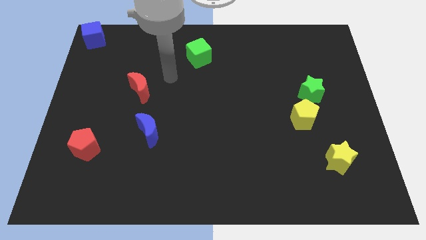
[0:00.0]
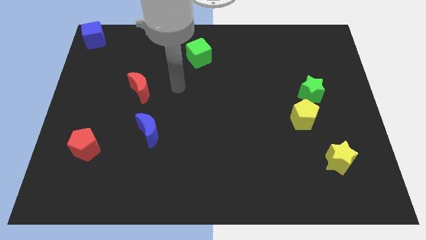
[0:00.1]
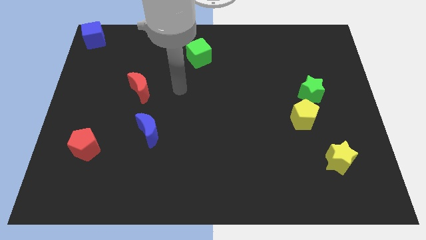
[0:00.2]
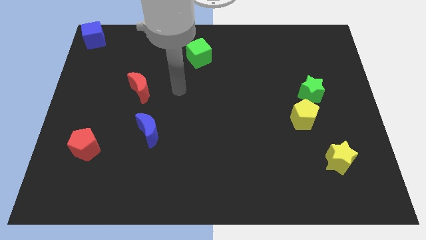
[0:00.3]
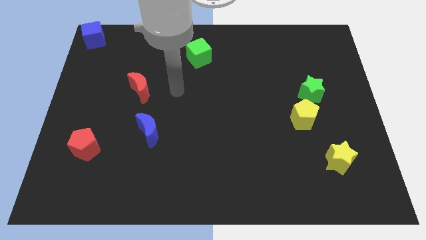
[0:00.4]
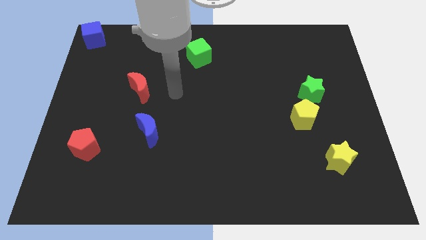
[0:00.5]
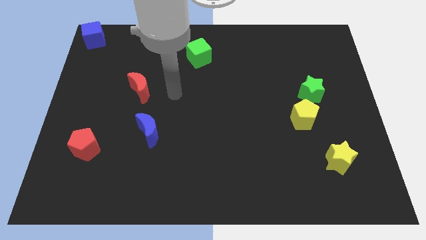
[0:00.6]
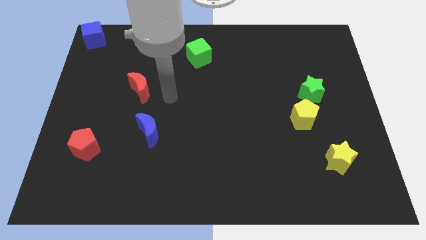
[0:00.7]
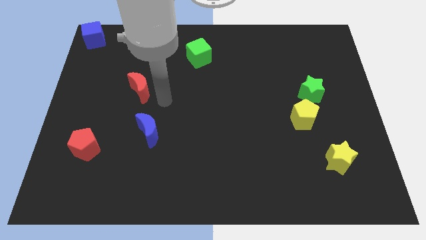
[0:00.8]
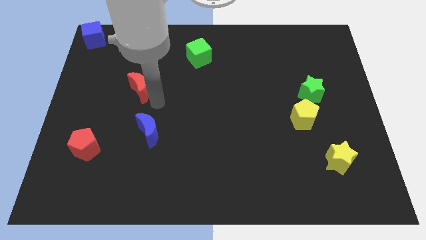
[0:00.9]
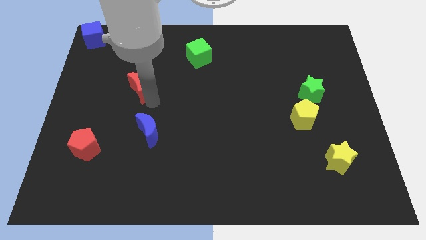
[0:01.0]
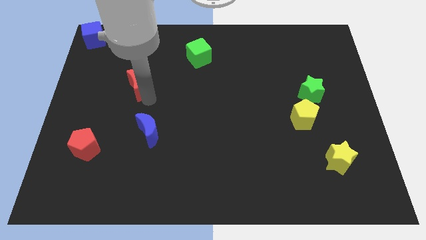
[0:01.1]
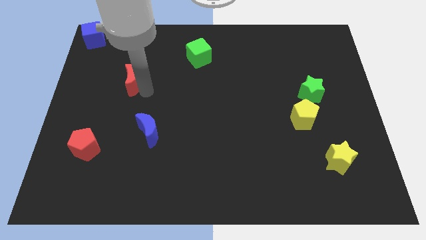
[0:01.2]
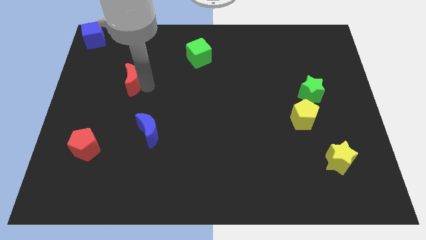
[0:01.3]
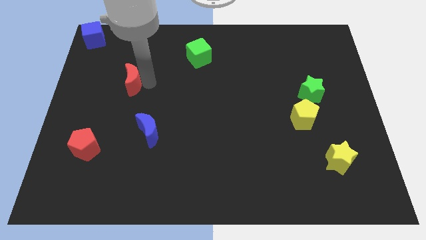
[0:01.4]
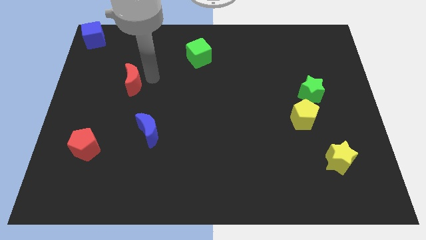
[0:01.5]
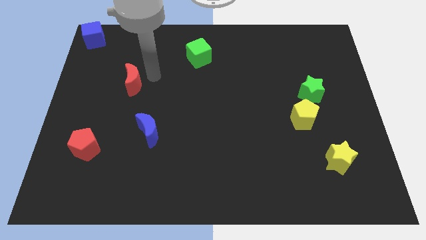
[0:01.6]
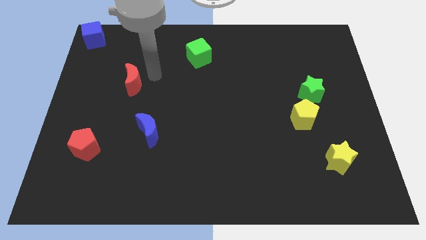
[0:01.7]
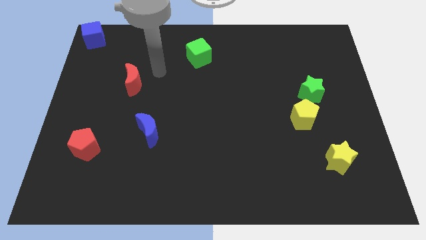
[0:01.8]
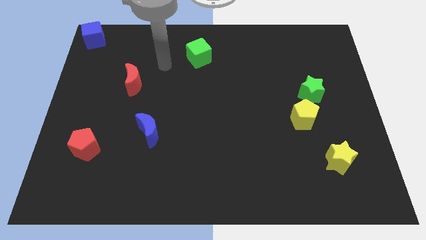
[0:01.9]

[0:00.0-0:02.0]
place the red moon diagonal to the left of the green cube

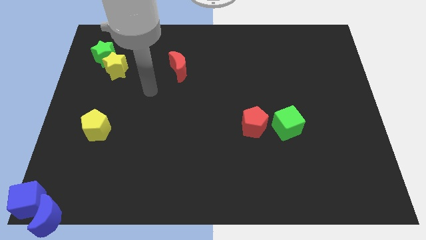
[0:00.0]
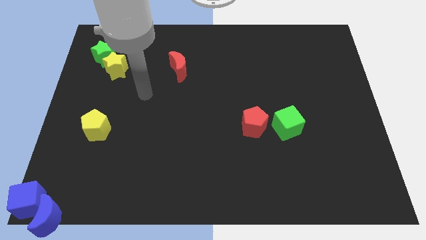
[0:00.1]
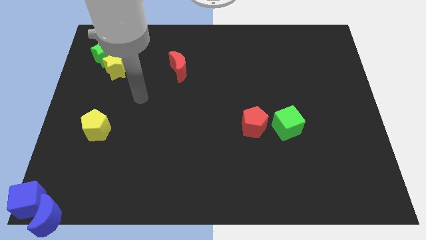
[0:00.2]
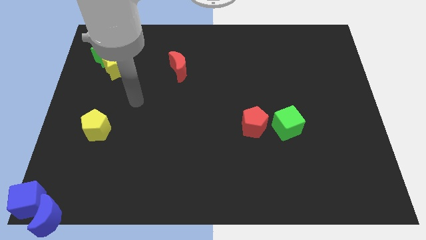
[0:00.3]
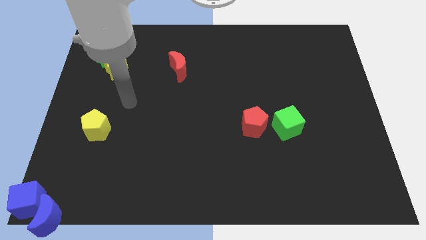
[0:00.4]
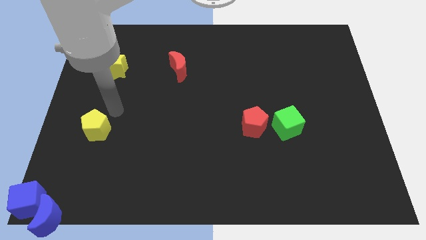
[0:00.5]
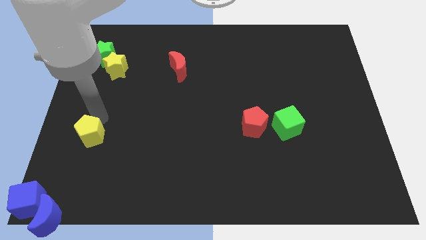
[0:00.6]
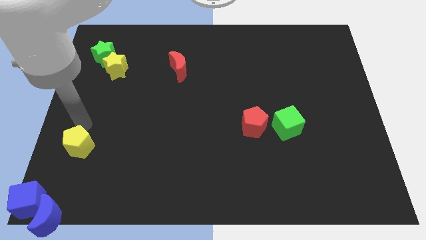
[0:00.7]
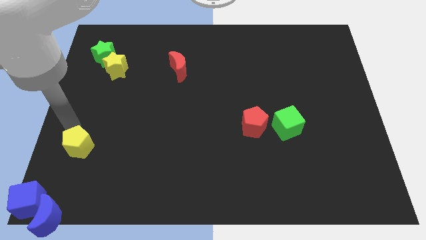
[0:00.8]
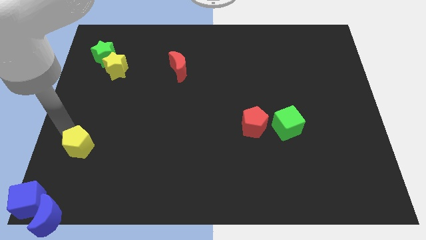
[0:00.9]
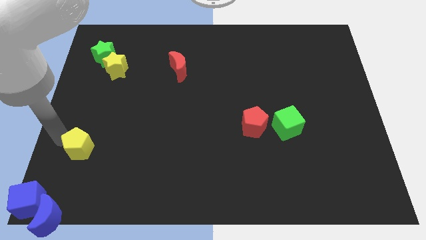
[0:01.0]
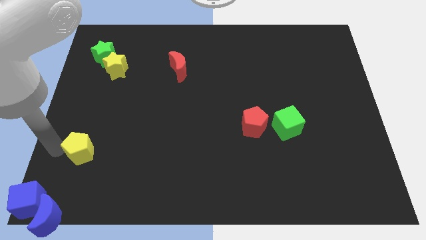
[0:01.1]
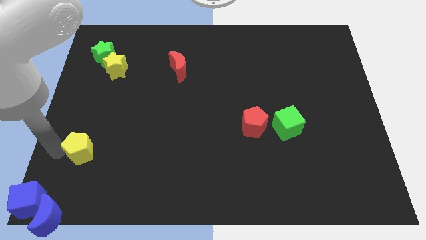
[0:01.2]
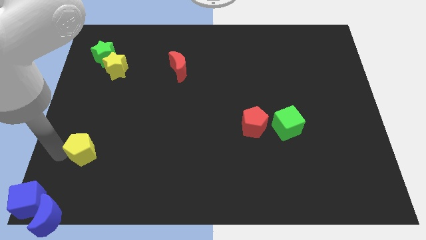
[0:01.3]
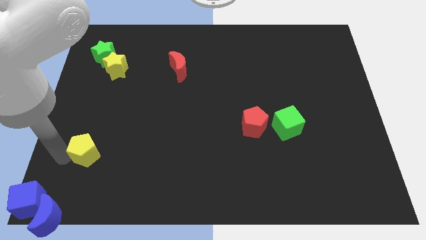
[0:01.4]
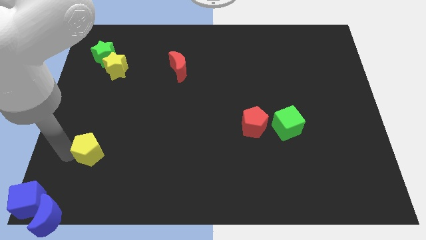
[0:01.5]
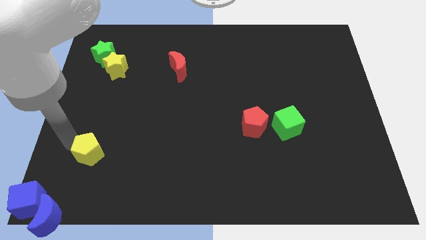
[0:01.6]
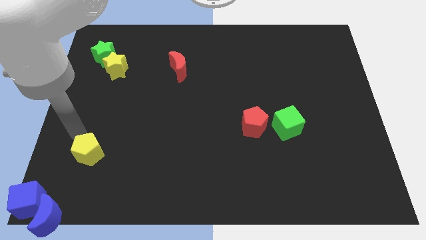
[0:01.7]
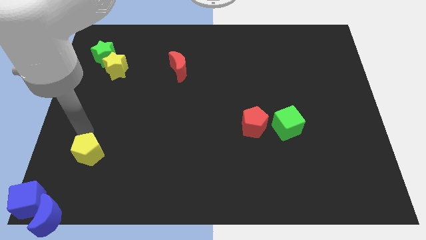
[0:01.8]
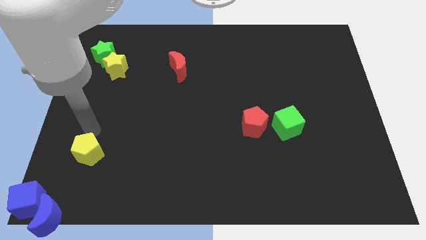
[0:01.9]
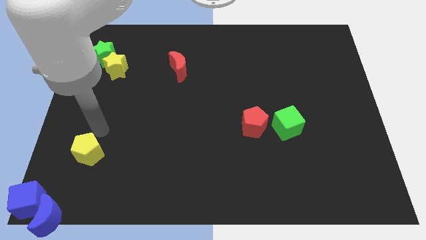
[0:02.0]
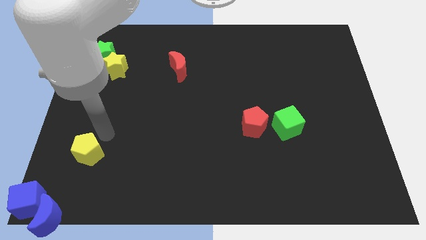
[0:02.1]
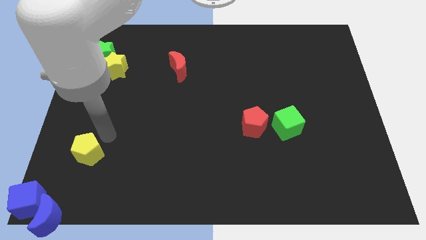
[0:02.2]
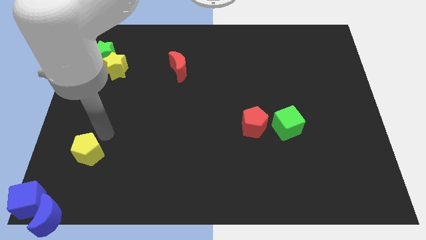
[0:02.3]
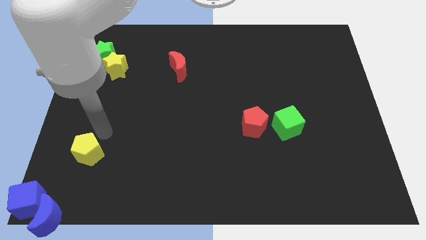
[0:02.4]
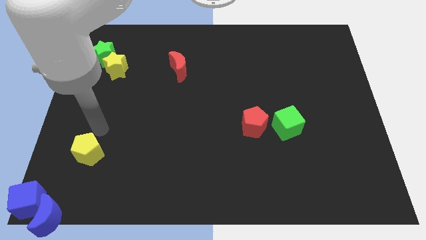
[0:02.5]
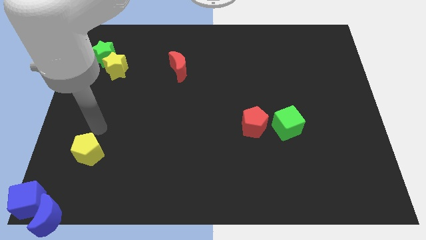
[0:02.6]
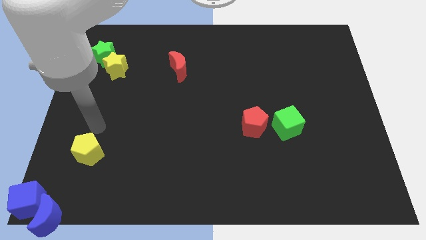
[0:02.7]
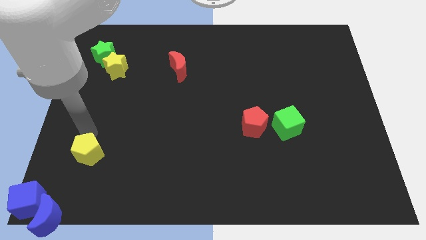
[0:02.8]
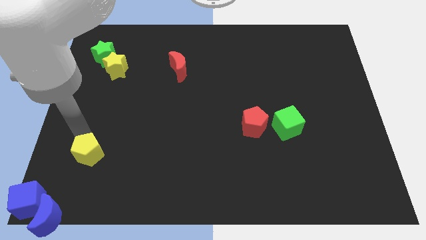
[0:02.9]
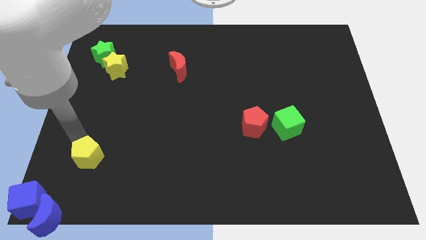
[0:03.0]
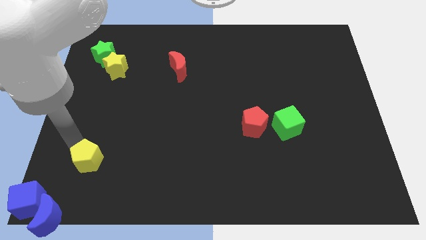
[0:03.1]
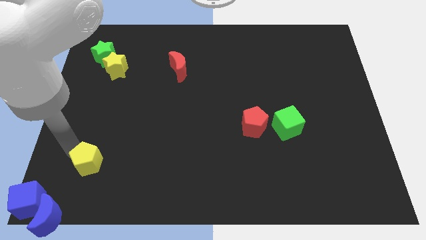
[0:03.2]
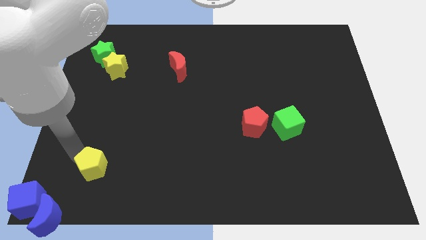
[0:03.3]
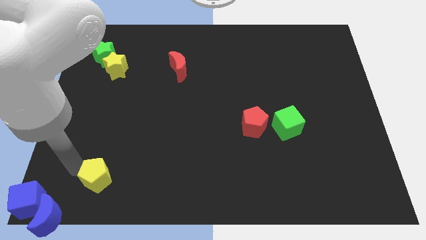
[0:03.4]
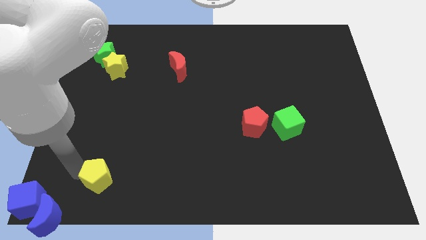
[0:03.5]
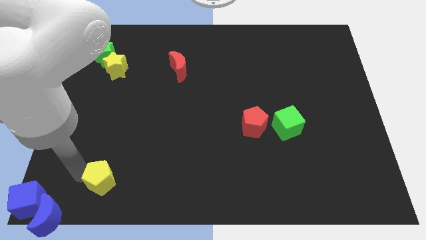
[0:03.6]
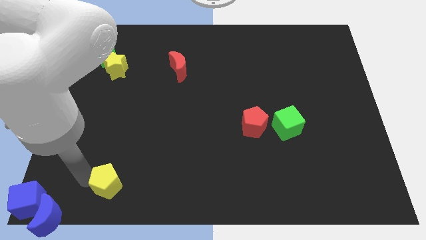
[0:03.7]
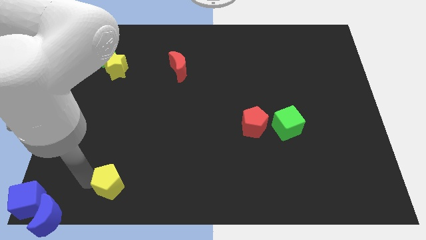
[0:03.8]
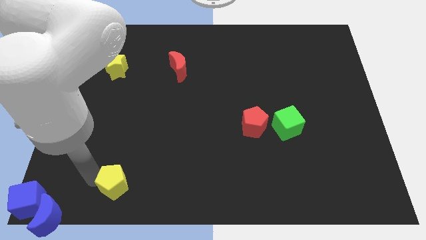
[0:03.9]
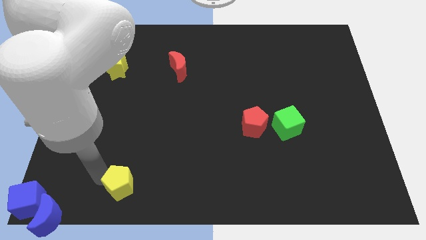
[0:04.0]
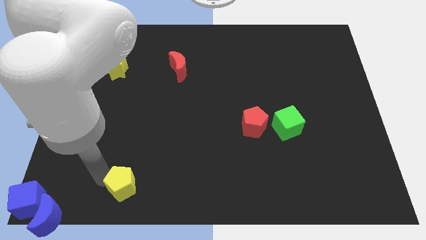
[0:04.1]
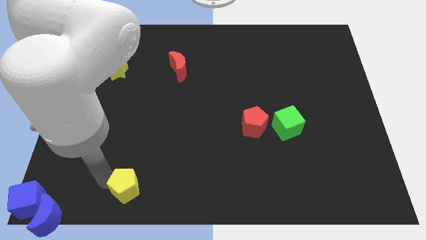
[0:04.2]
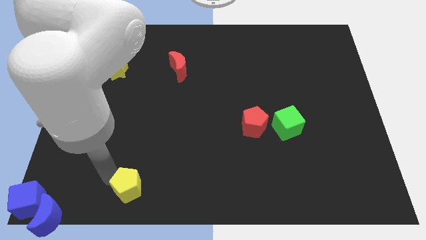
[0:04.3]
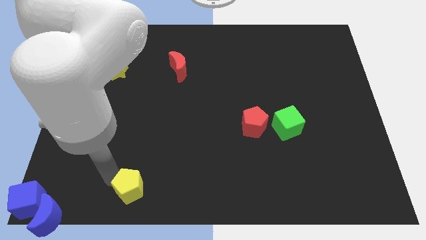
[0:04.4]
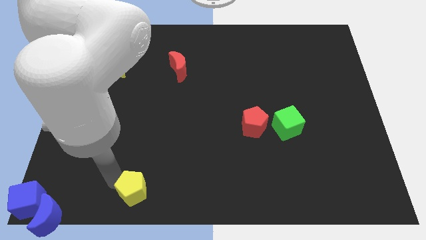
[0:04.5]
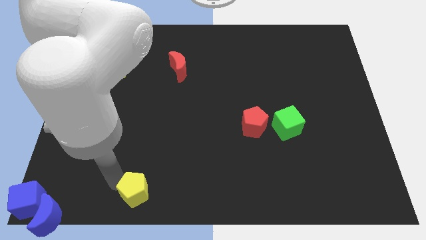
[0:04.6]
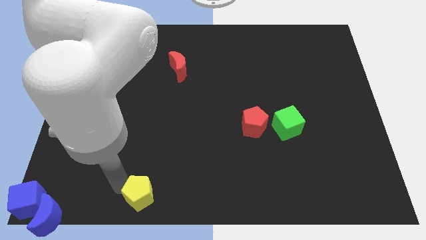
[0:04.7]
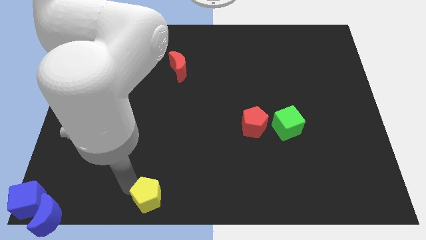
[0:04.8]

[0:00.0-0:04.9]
push the yellow pentagon to the bottom of the board

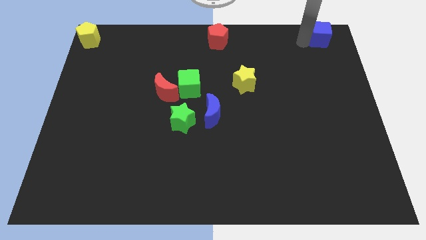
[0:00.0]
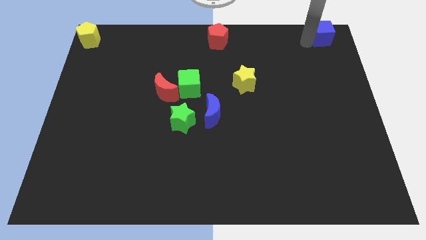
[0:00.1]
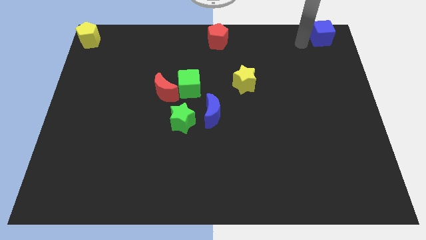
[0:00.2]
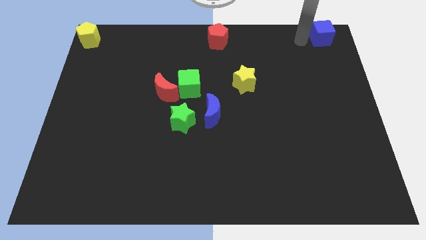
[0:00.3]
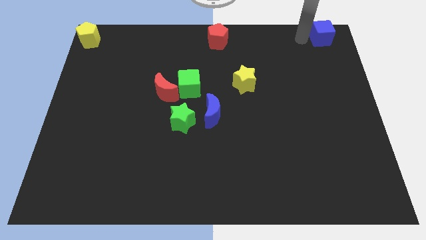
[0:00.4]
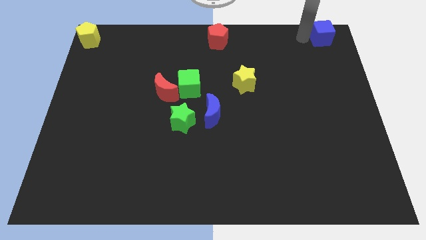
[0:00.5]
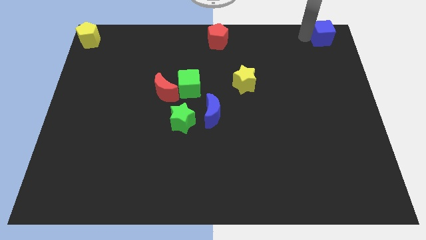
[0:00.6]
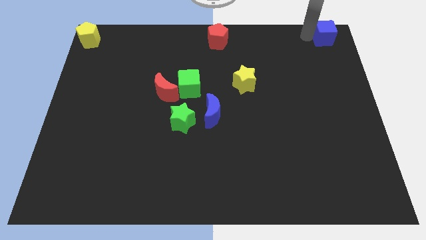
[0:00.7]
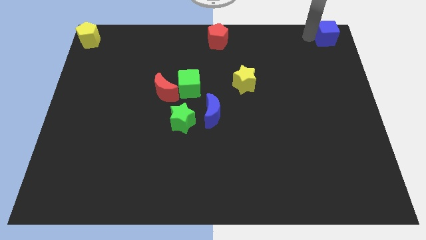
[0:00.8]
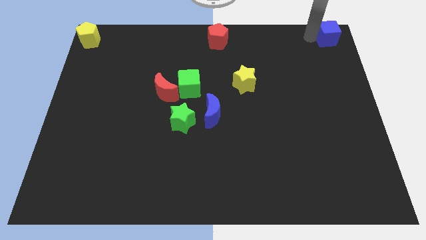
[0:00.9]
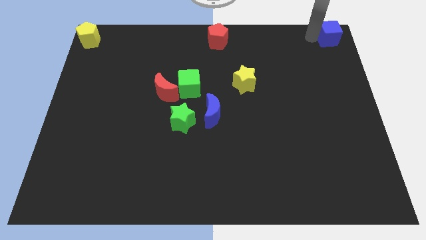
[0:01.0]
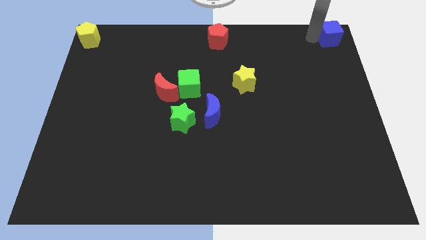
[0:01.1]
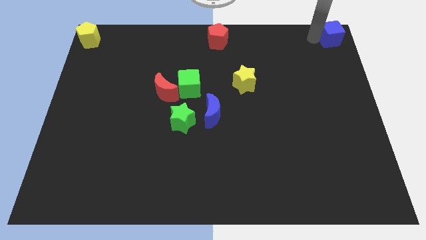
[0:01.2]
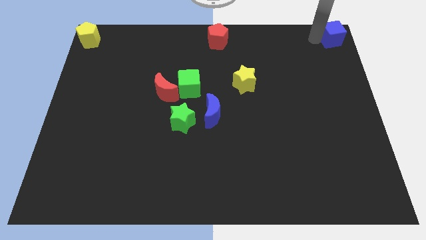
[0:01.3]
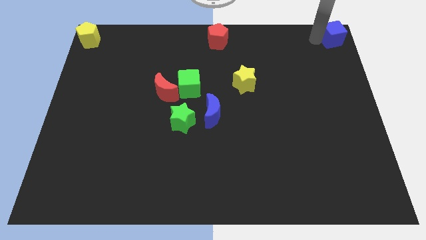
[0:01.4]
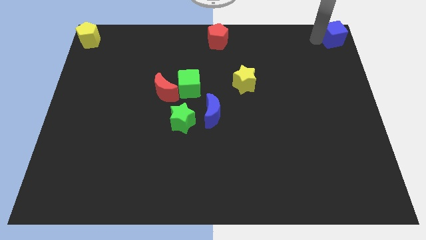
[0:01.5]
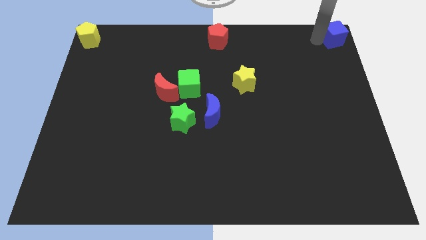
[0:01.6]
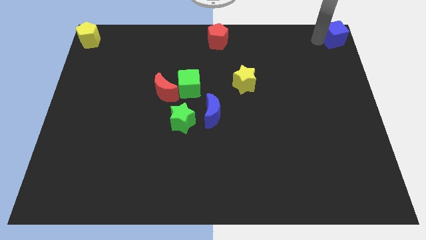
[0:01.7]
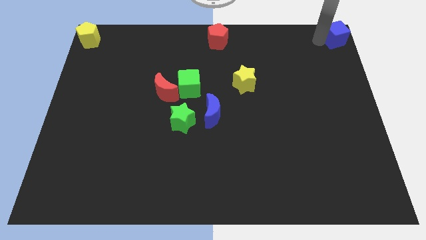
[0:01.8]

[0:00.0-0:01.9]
move the blue cube to the top right corner
